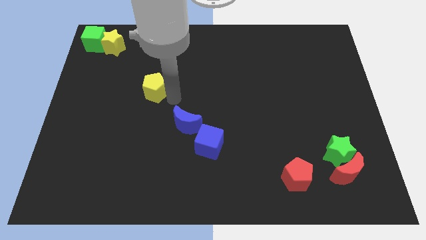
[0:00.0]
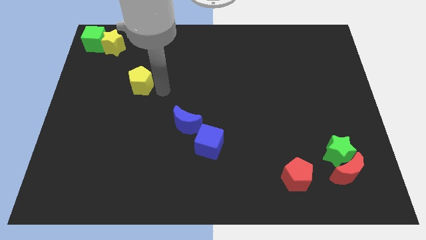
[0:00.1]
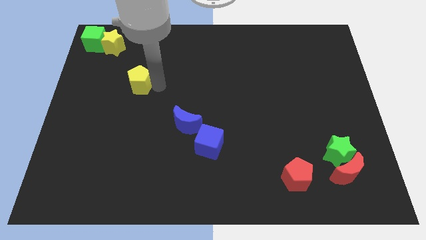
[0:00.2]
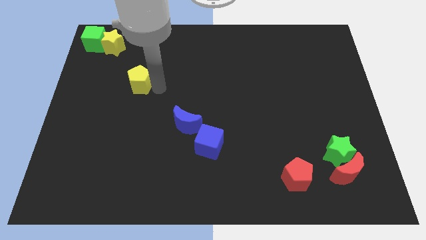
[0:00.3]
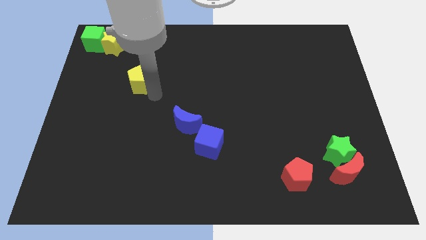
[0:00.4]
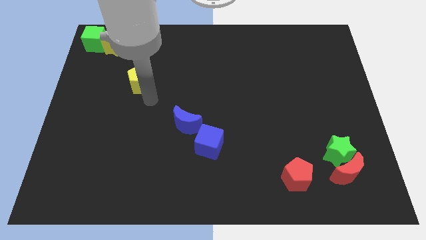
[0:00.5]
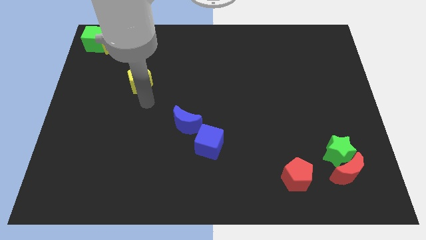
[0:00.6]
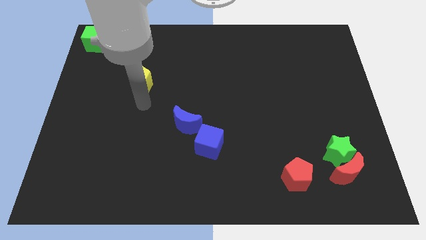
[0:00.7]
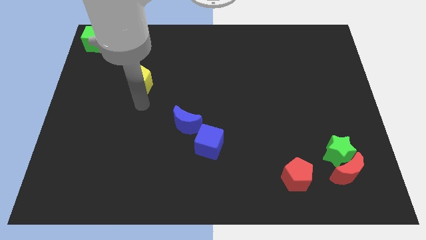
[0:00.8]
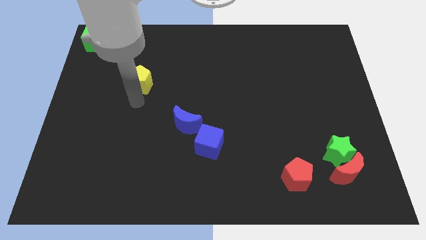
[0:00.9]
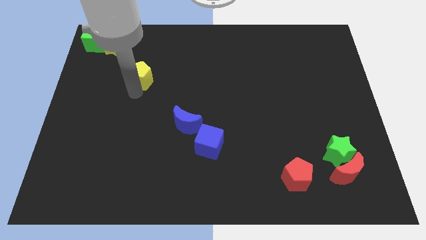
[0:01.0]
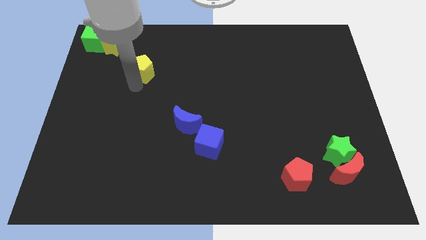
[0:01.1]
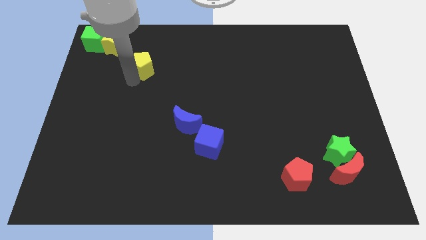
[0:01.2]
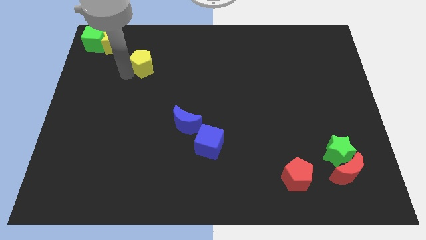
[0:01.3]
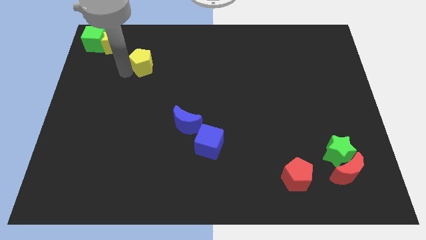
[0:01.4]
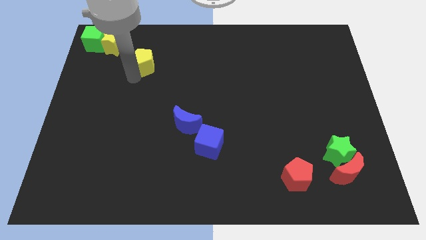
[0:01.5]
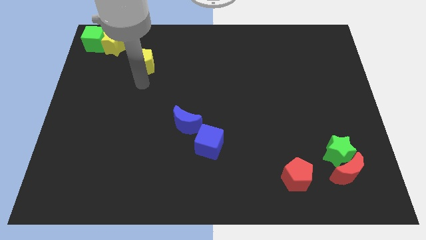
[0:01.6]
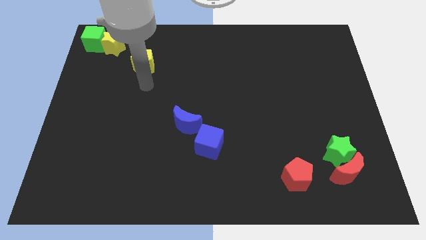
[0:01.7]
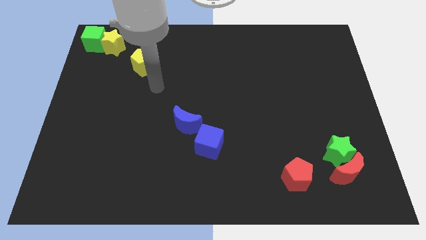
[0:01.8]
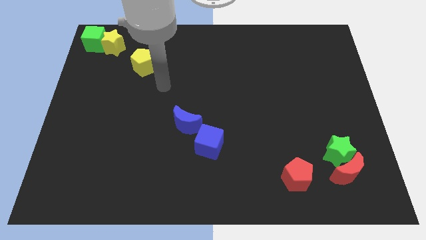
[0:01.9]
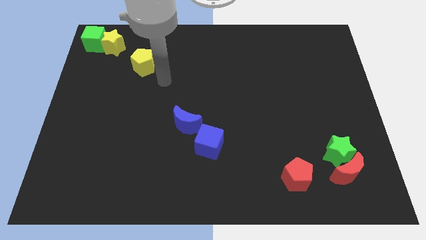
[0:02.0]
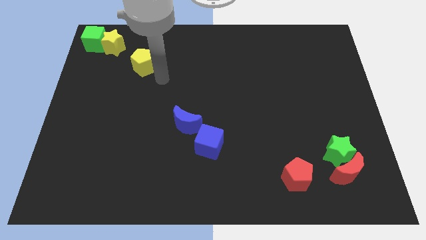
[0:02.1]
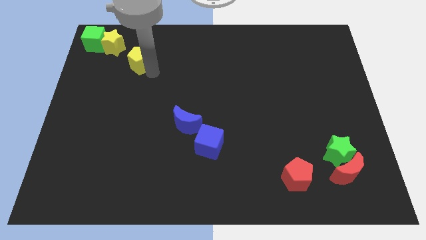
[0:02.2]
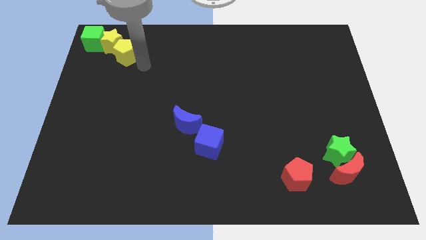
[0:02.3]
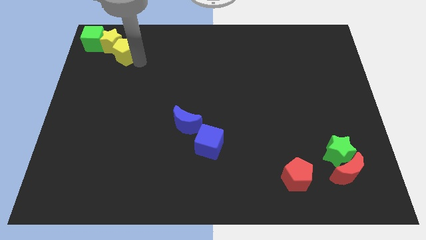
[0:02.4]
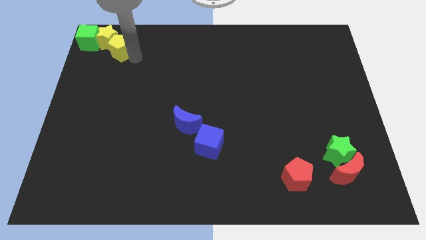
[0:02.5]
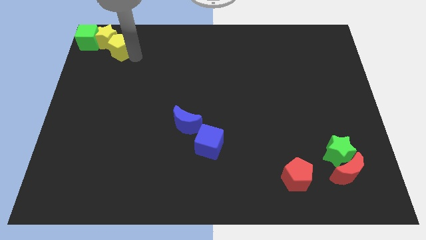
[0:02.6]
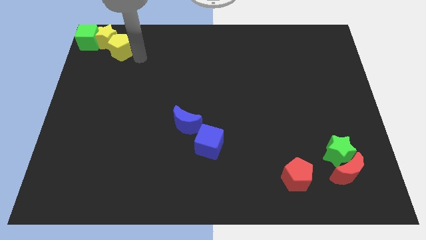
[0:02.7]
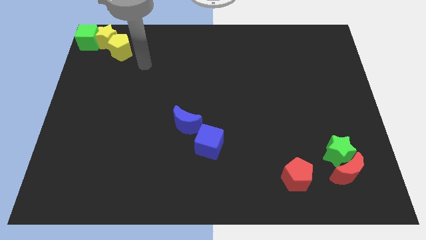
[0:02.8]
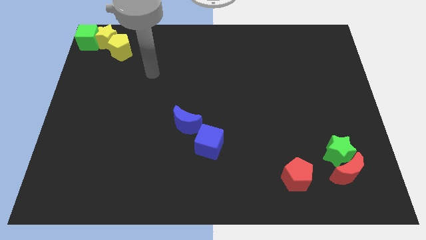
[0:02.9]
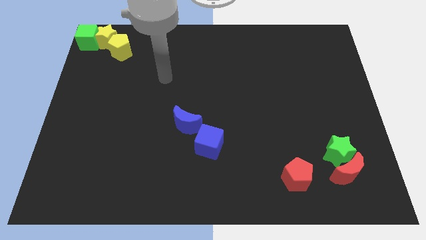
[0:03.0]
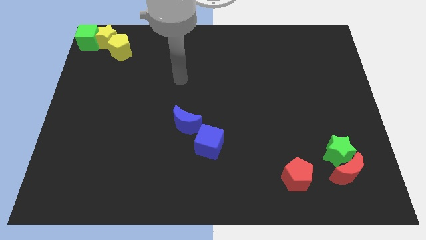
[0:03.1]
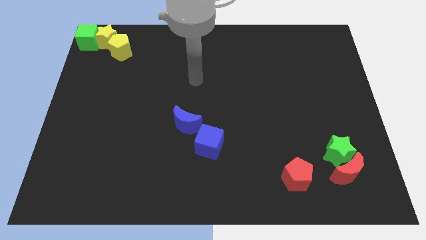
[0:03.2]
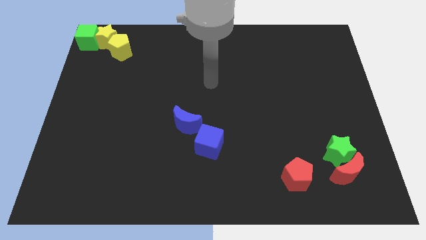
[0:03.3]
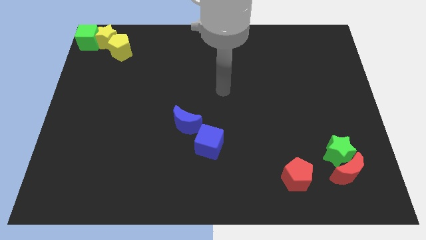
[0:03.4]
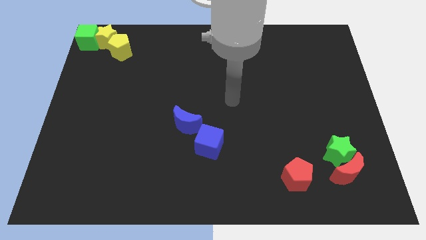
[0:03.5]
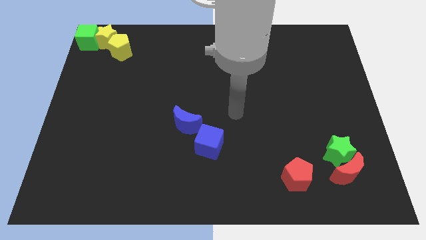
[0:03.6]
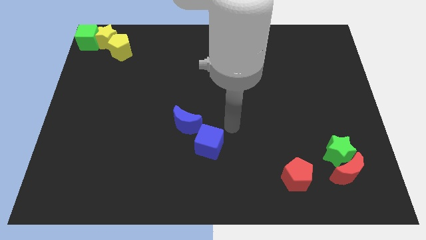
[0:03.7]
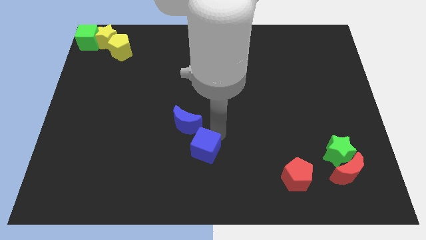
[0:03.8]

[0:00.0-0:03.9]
adjust the yellow pentagon at the top left of the board

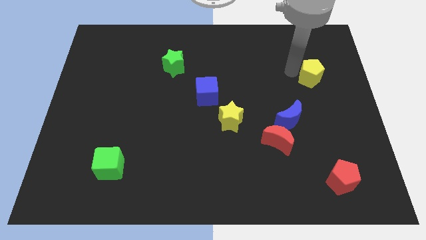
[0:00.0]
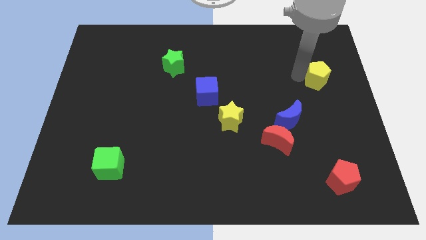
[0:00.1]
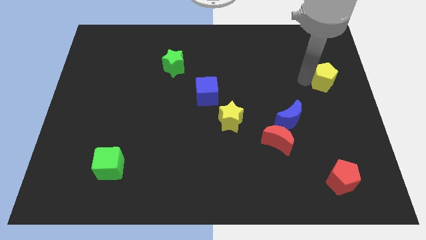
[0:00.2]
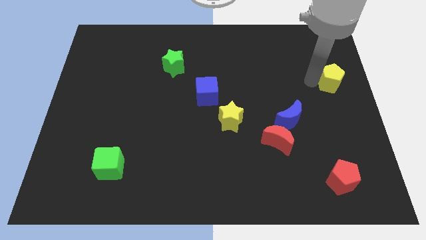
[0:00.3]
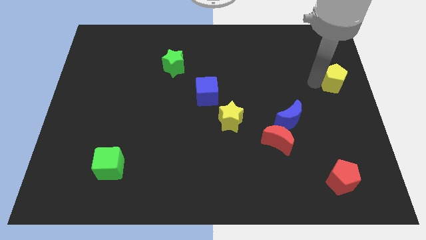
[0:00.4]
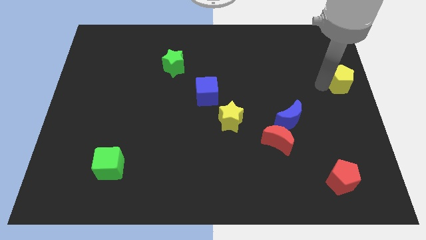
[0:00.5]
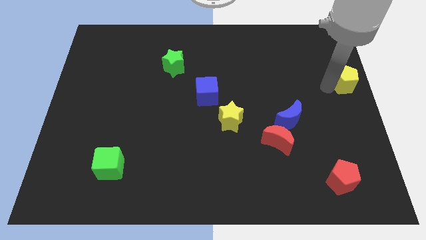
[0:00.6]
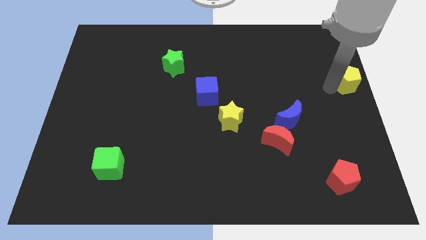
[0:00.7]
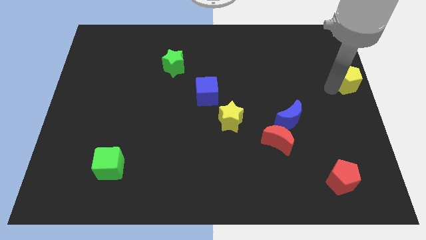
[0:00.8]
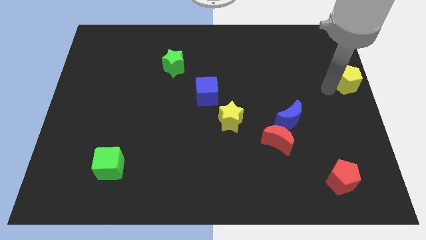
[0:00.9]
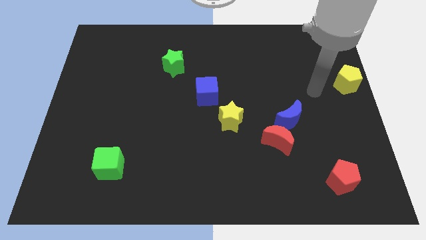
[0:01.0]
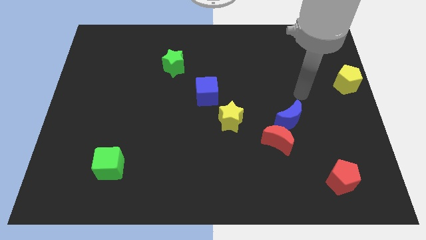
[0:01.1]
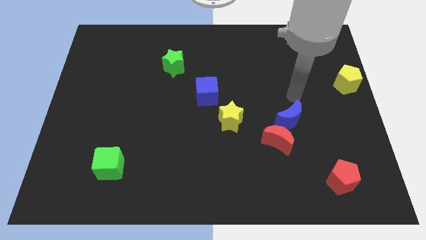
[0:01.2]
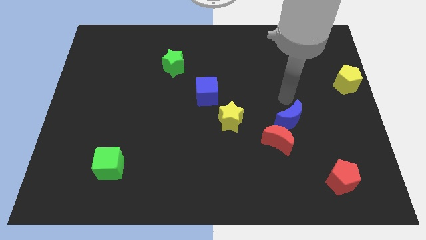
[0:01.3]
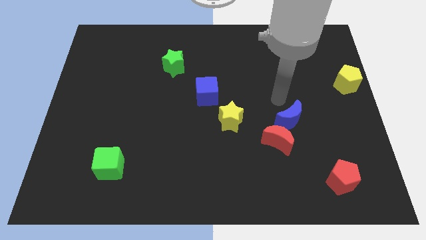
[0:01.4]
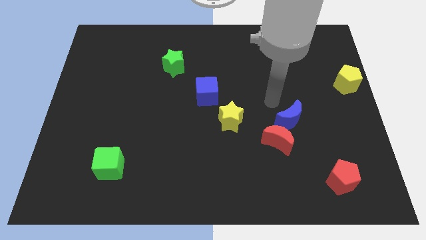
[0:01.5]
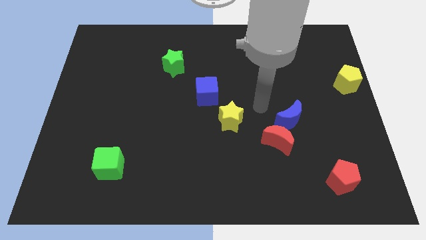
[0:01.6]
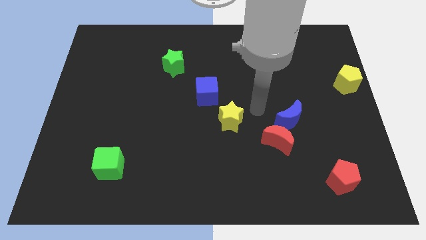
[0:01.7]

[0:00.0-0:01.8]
slide the yellow pentagon to the complete right

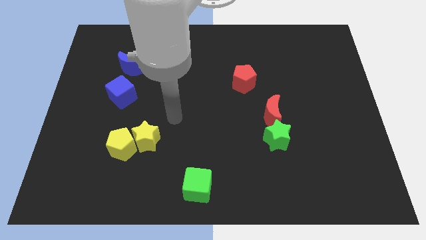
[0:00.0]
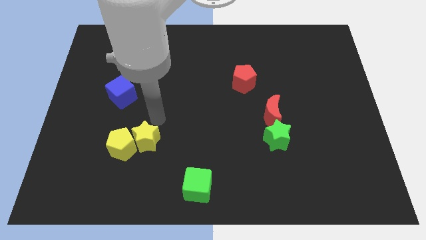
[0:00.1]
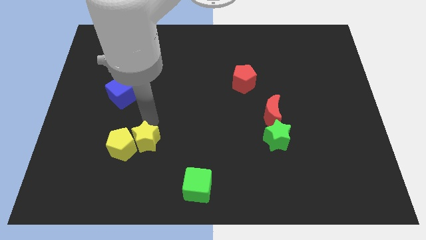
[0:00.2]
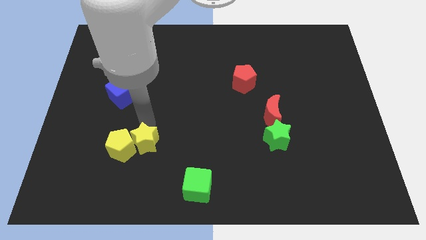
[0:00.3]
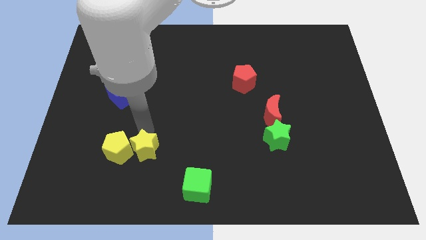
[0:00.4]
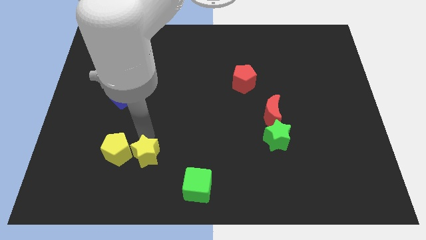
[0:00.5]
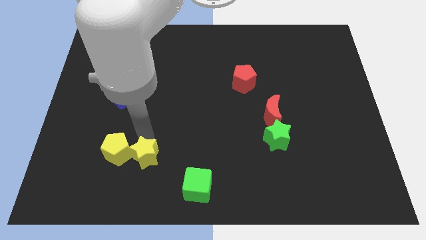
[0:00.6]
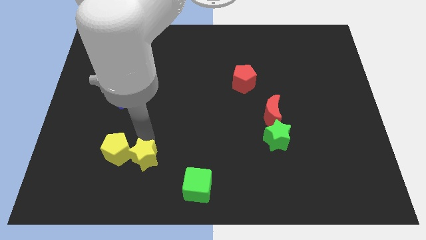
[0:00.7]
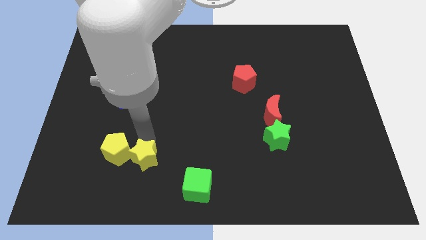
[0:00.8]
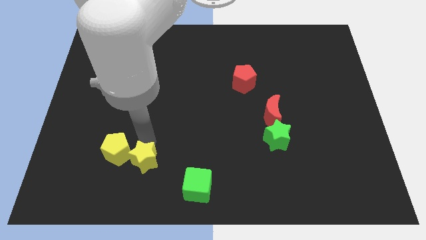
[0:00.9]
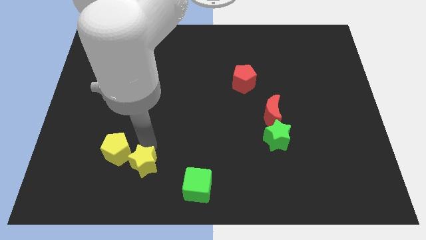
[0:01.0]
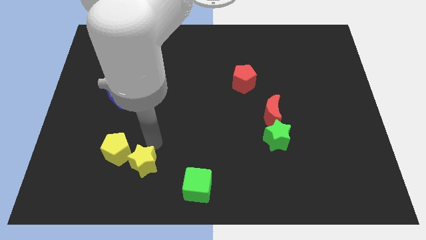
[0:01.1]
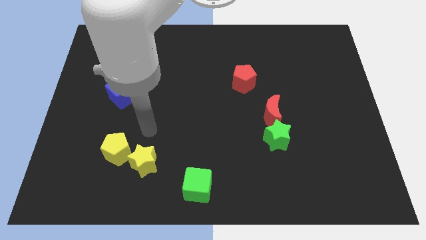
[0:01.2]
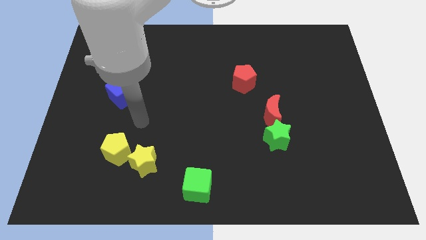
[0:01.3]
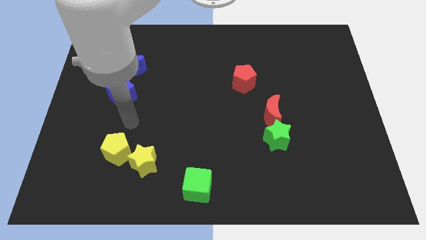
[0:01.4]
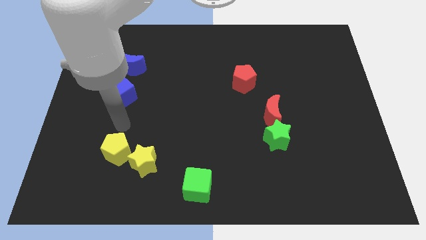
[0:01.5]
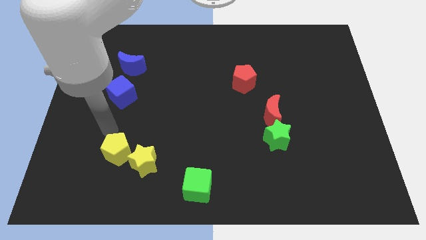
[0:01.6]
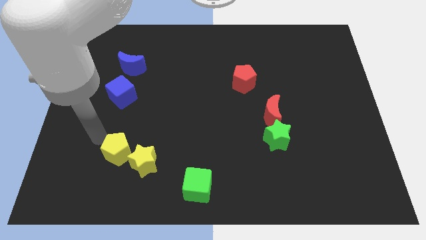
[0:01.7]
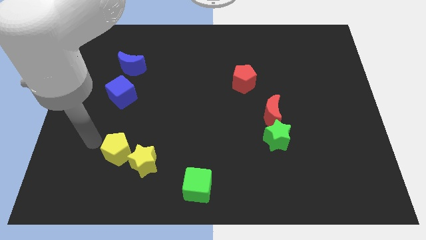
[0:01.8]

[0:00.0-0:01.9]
push the yellow star slightly towards bottom

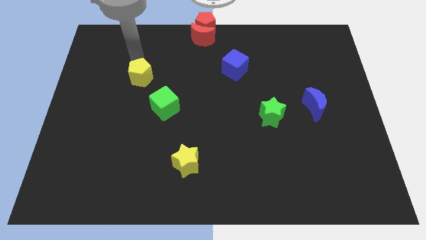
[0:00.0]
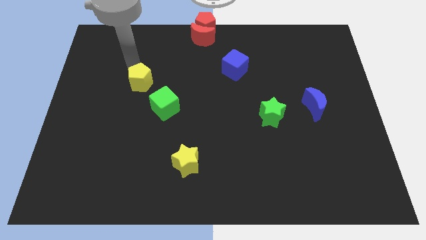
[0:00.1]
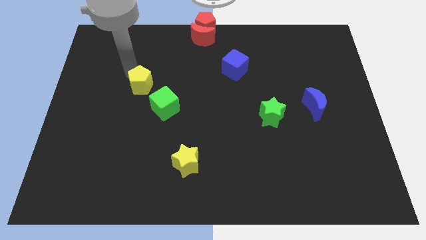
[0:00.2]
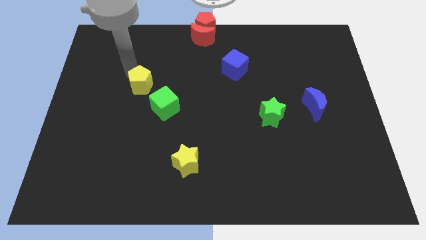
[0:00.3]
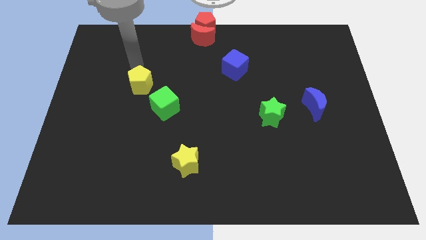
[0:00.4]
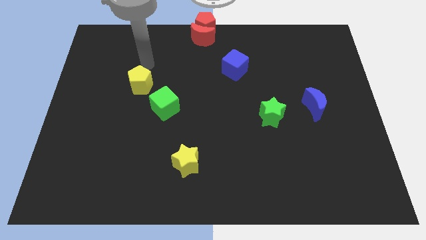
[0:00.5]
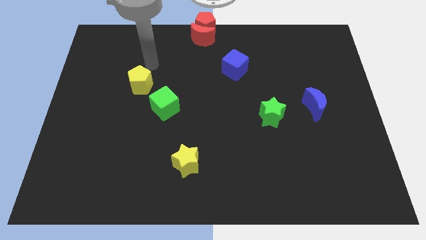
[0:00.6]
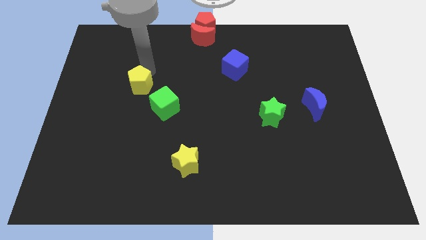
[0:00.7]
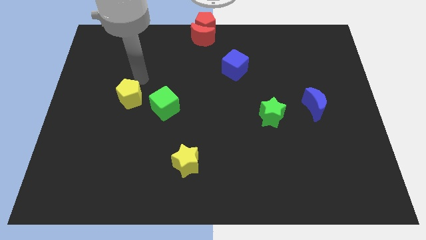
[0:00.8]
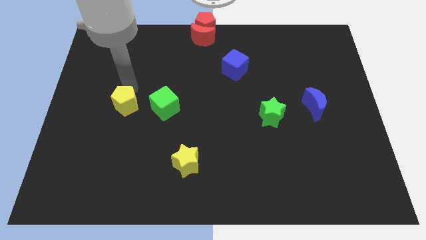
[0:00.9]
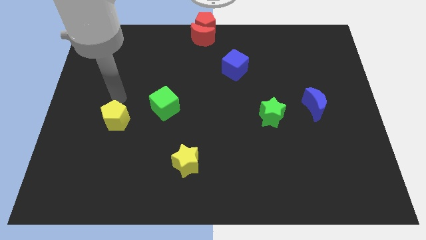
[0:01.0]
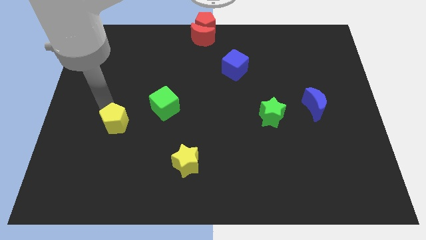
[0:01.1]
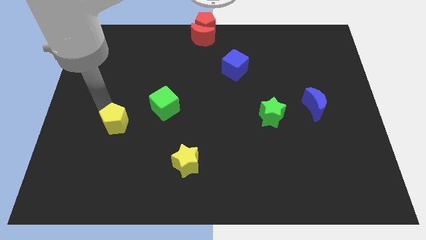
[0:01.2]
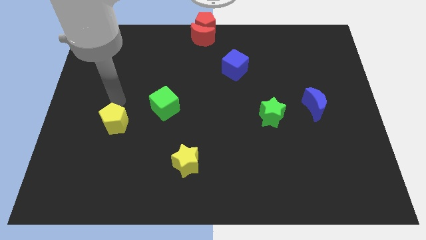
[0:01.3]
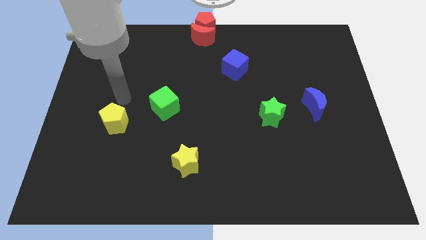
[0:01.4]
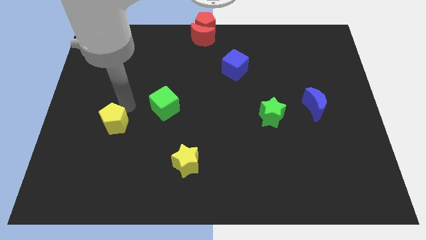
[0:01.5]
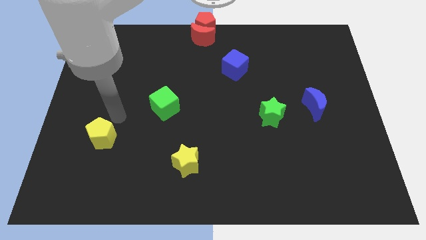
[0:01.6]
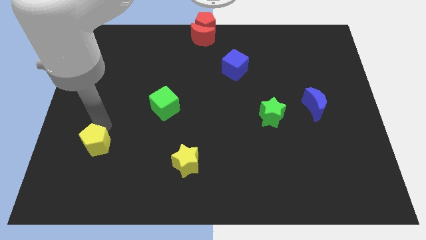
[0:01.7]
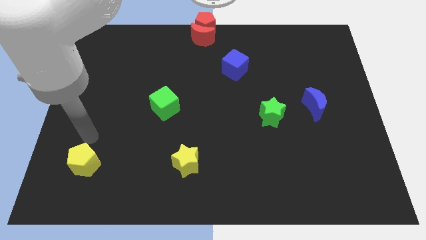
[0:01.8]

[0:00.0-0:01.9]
push the yellow pentagon towards the bottom left of the board
